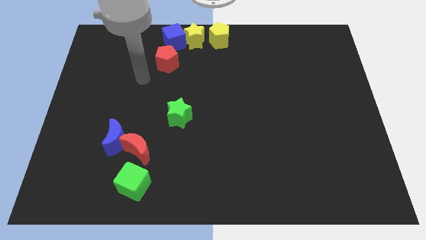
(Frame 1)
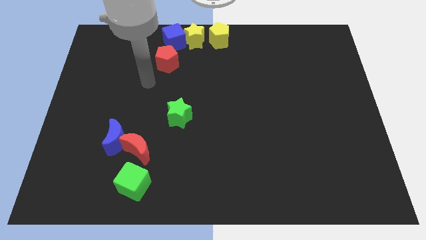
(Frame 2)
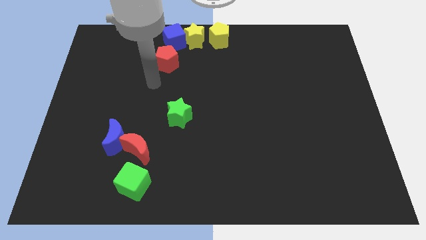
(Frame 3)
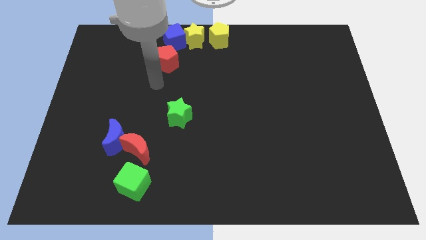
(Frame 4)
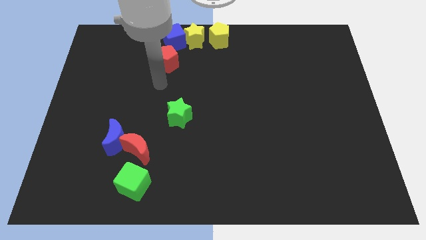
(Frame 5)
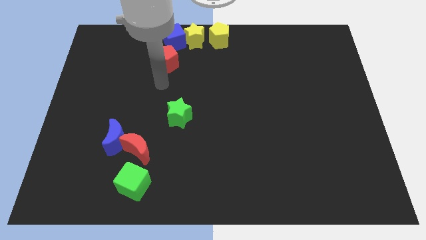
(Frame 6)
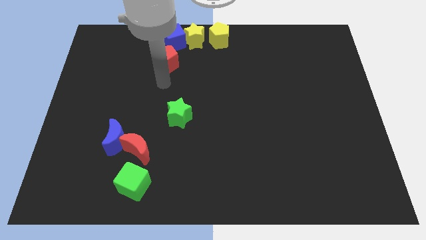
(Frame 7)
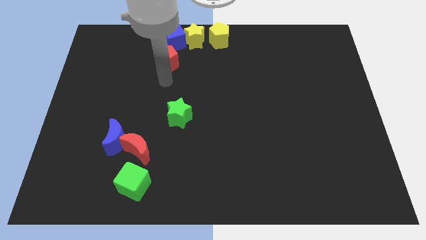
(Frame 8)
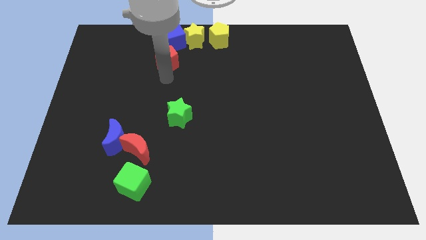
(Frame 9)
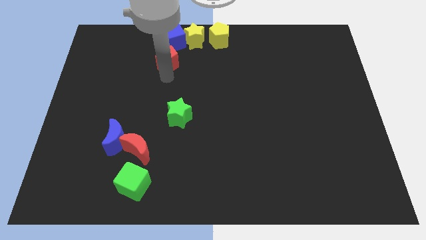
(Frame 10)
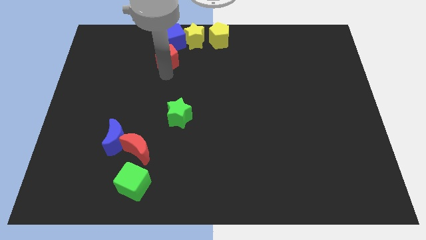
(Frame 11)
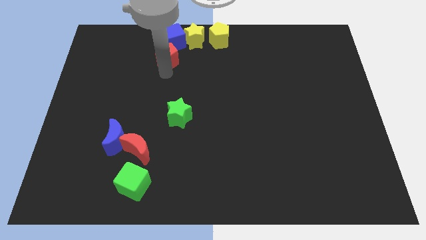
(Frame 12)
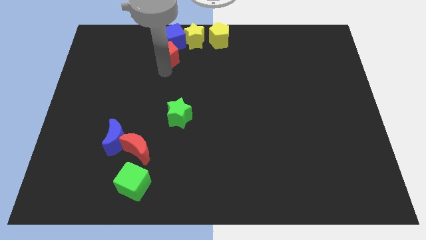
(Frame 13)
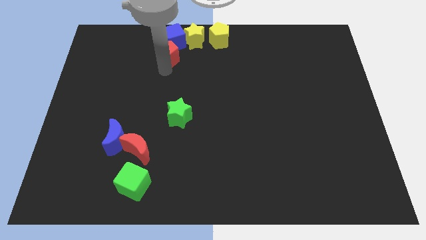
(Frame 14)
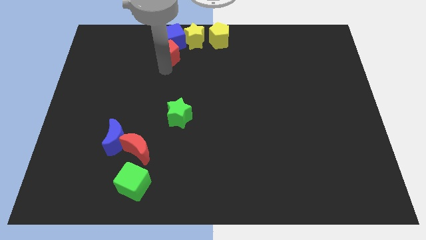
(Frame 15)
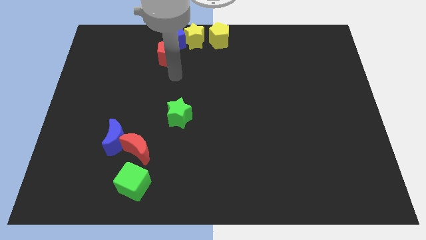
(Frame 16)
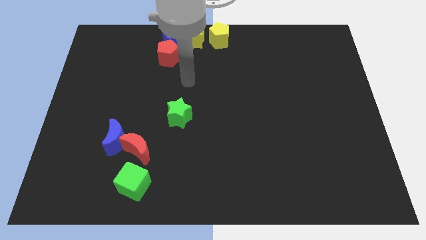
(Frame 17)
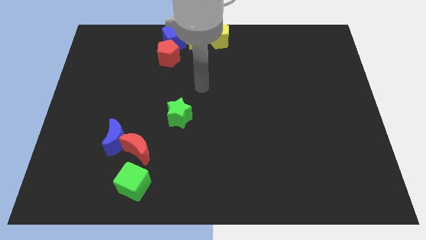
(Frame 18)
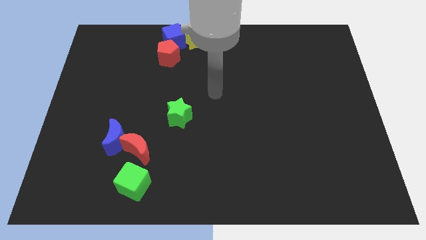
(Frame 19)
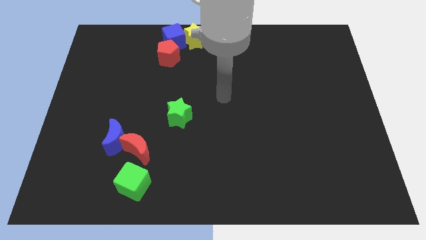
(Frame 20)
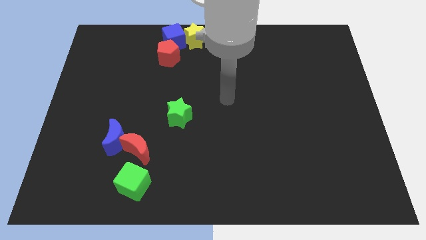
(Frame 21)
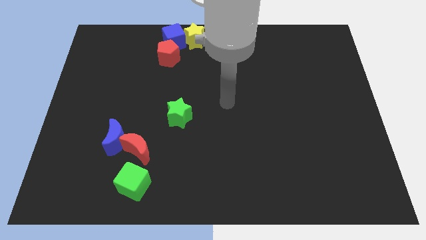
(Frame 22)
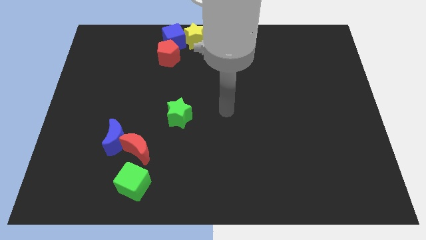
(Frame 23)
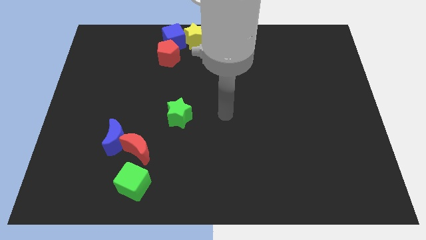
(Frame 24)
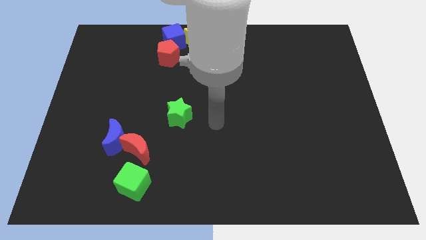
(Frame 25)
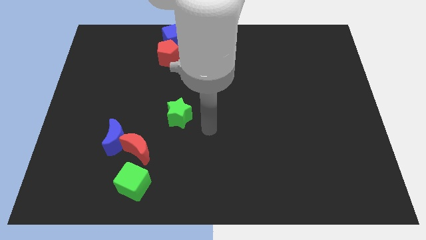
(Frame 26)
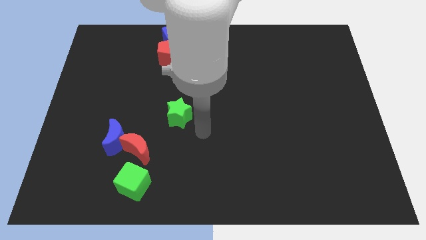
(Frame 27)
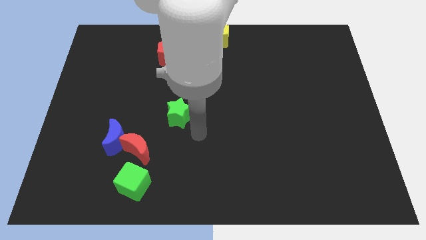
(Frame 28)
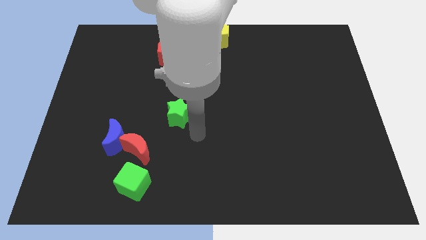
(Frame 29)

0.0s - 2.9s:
place the arm near the green star

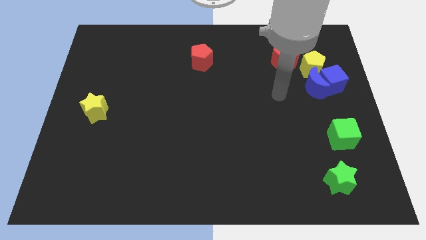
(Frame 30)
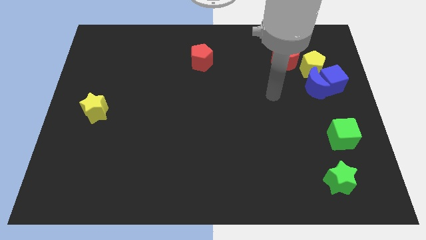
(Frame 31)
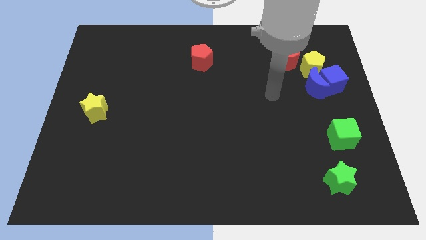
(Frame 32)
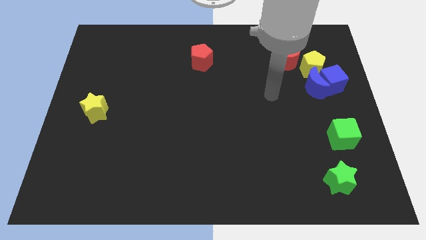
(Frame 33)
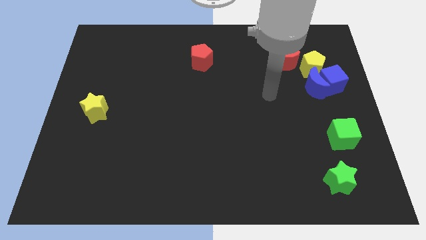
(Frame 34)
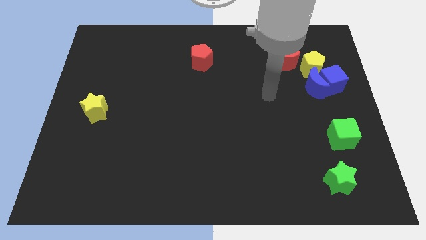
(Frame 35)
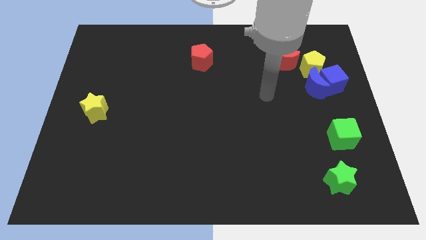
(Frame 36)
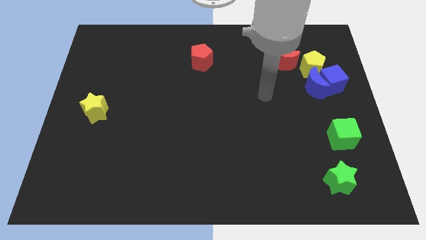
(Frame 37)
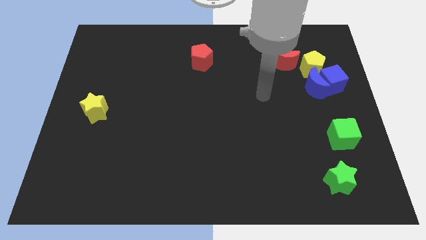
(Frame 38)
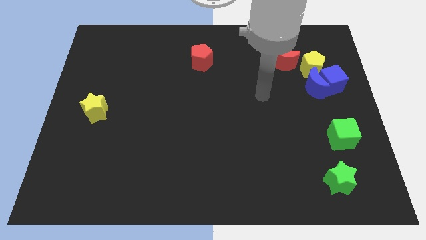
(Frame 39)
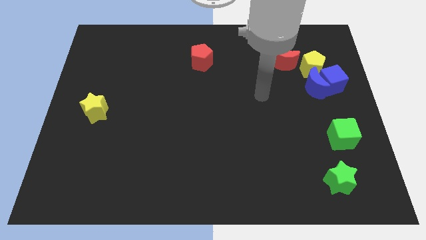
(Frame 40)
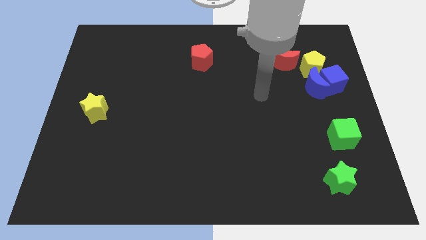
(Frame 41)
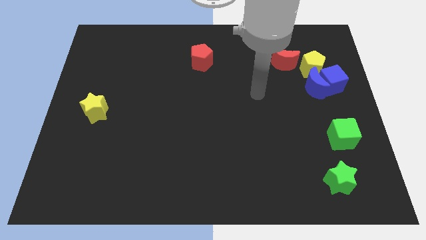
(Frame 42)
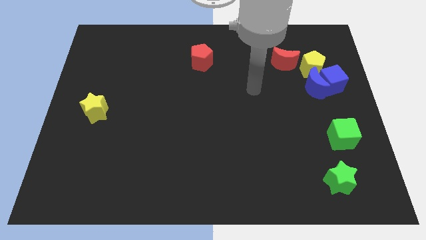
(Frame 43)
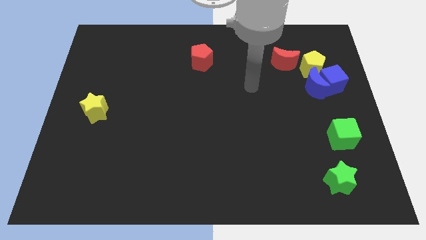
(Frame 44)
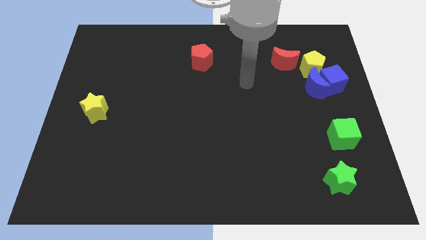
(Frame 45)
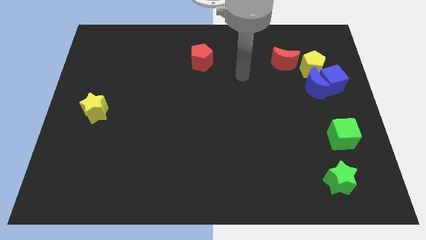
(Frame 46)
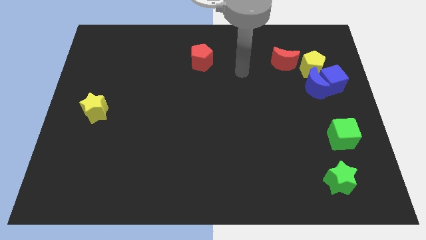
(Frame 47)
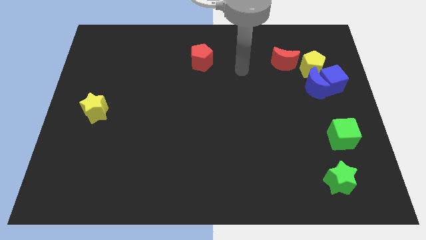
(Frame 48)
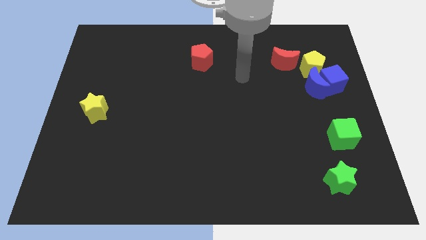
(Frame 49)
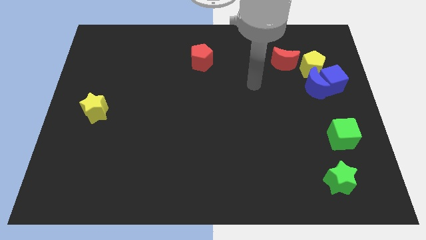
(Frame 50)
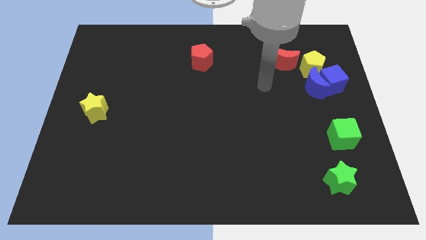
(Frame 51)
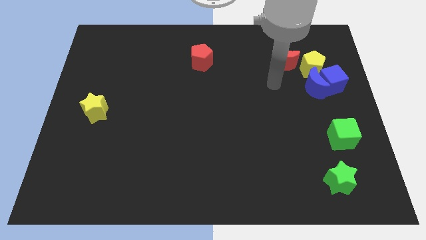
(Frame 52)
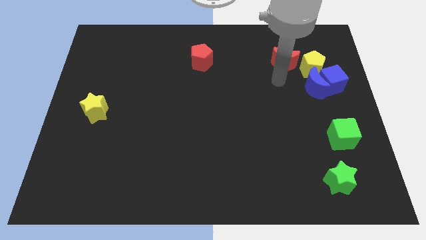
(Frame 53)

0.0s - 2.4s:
place your hand under the red crescent

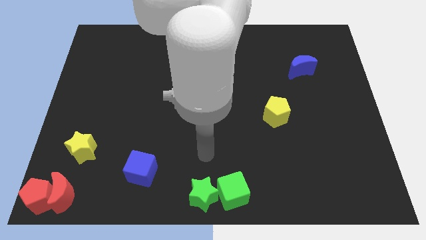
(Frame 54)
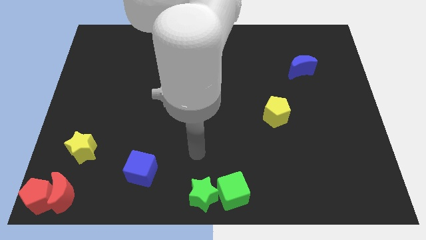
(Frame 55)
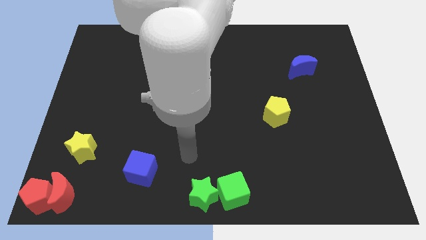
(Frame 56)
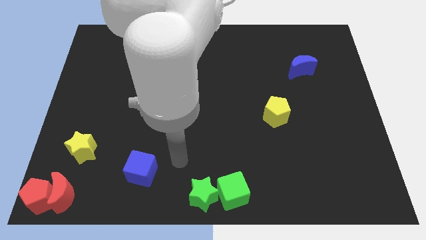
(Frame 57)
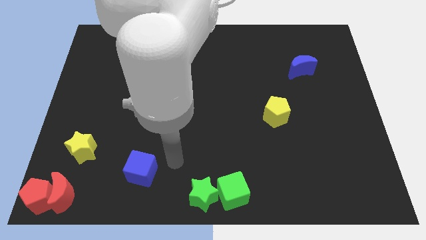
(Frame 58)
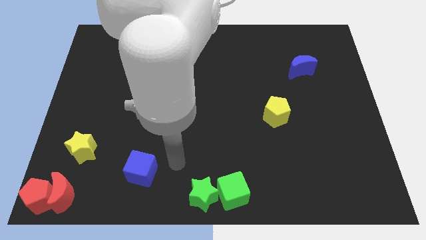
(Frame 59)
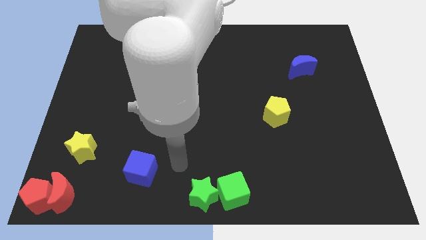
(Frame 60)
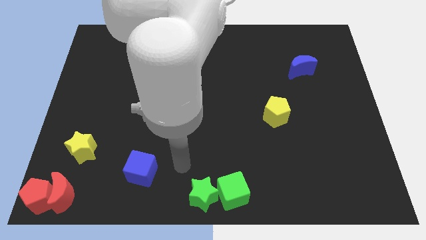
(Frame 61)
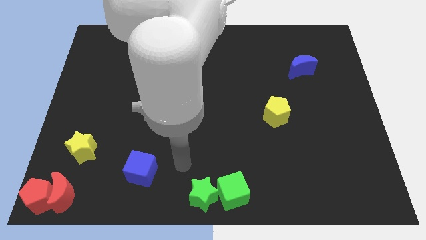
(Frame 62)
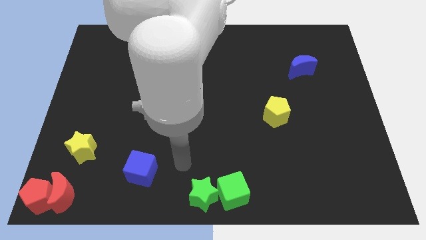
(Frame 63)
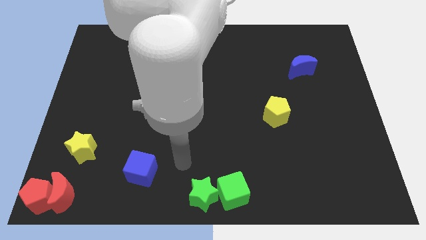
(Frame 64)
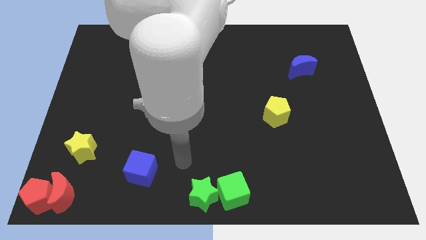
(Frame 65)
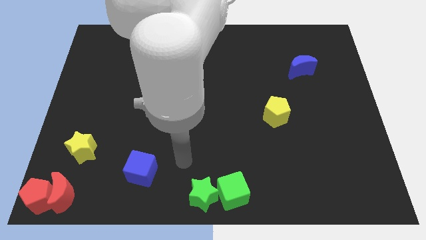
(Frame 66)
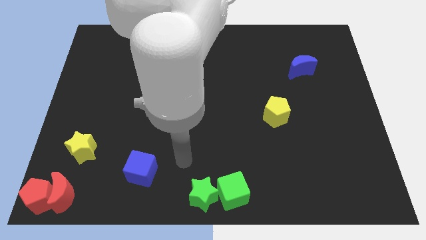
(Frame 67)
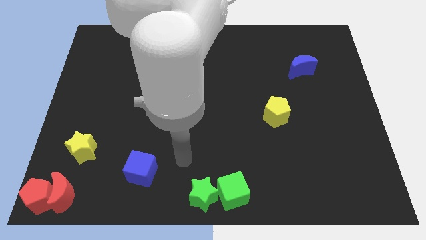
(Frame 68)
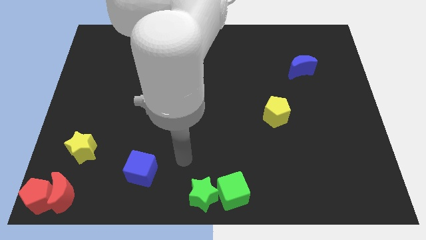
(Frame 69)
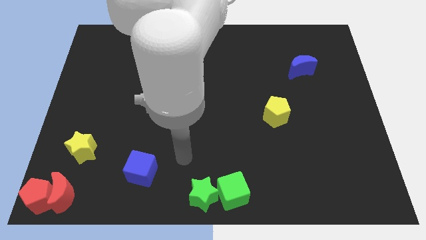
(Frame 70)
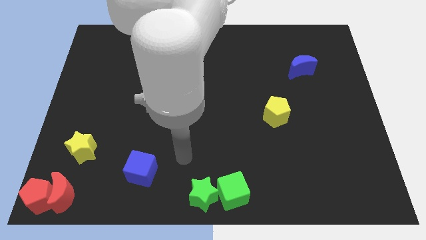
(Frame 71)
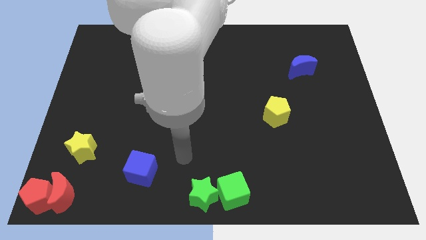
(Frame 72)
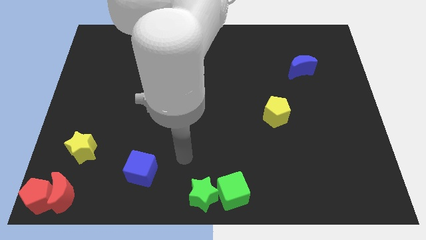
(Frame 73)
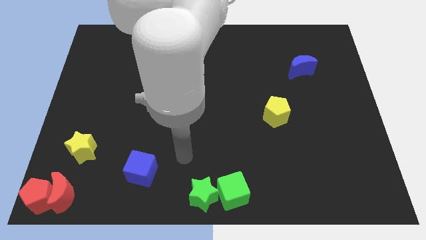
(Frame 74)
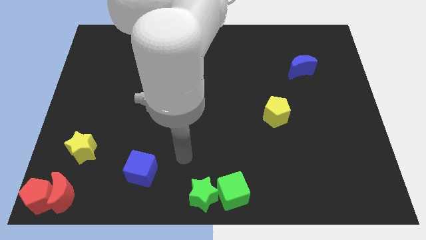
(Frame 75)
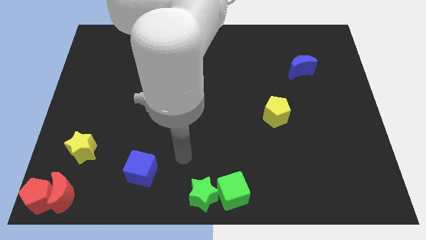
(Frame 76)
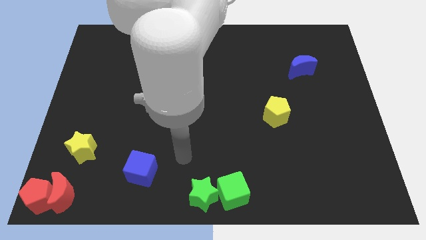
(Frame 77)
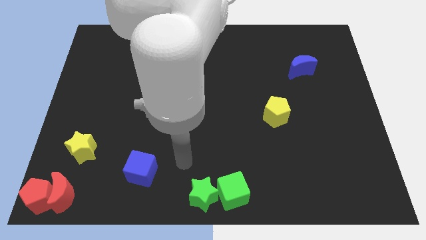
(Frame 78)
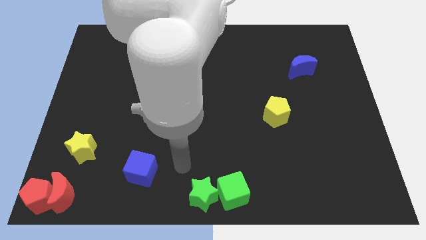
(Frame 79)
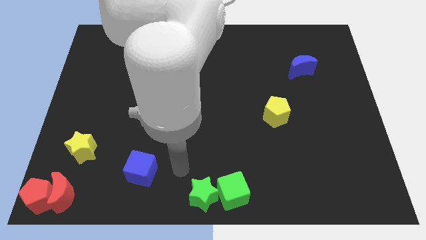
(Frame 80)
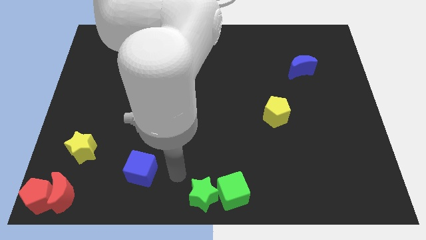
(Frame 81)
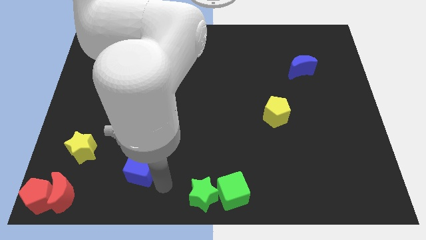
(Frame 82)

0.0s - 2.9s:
move arm near blue cube

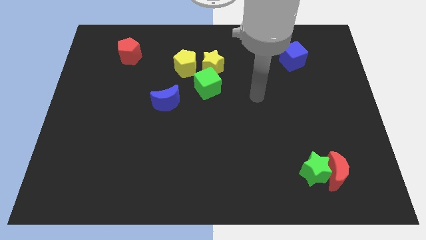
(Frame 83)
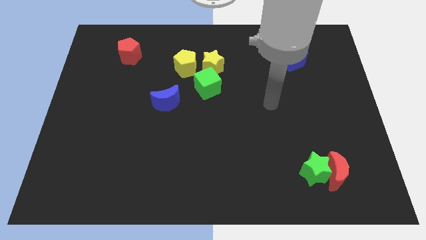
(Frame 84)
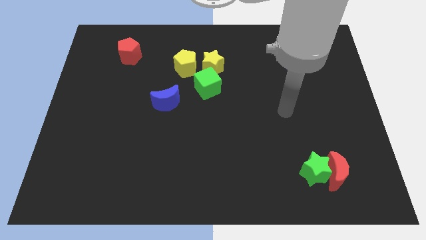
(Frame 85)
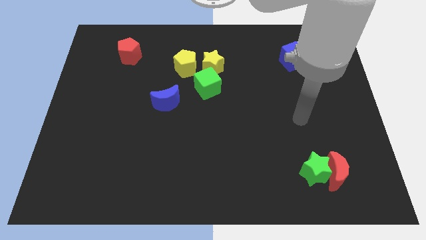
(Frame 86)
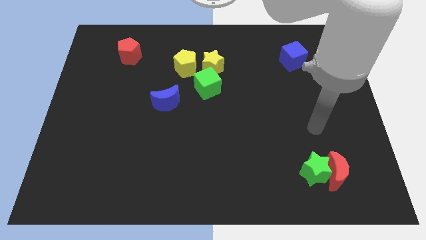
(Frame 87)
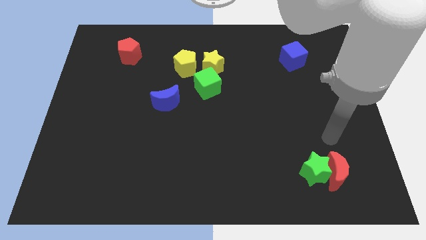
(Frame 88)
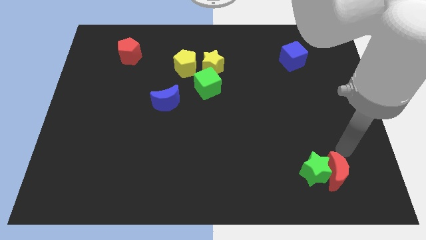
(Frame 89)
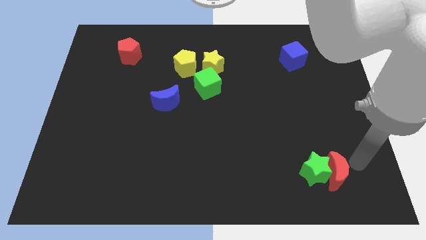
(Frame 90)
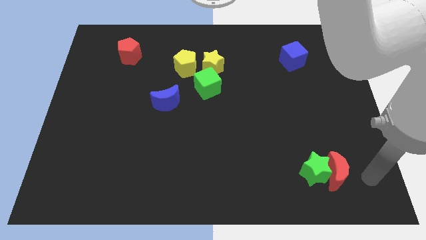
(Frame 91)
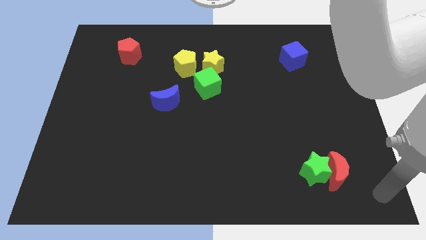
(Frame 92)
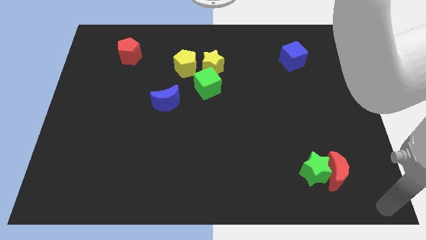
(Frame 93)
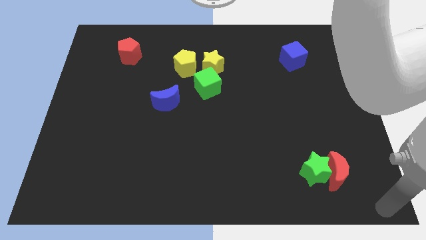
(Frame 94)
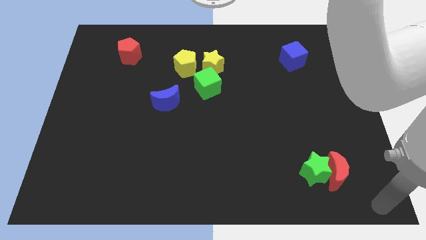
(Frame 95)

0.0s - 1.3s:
place arm at bottom right corner
